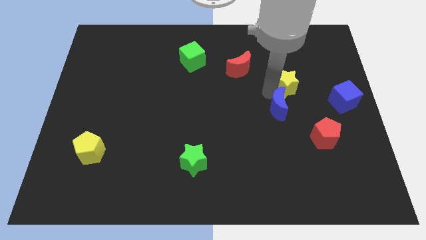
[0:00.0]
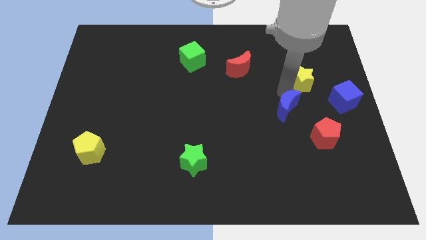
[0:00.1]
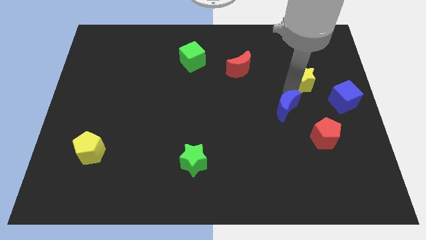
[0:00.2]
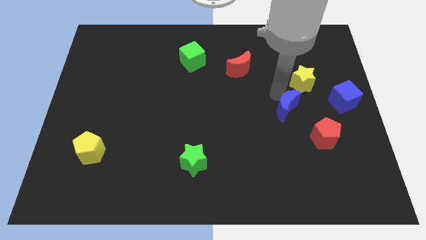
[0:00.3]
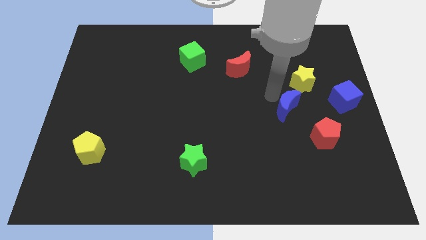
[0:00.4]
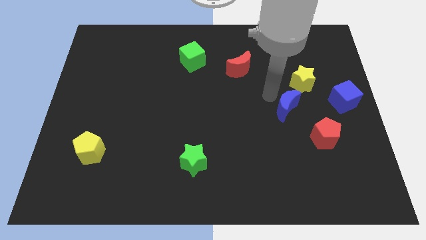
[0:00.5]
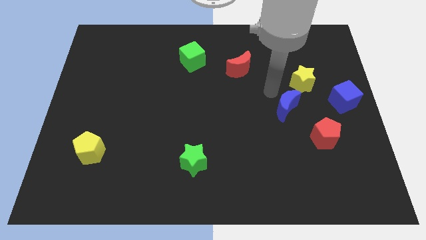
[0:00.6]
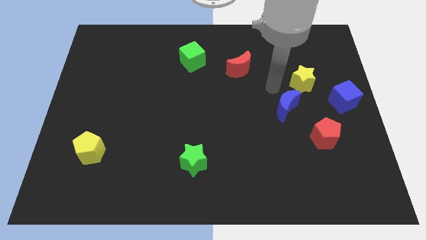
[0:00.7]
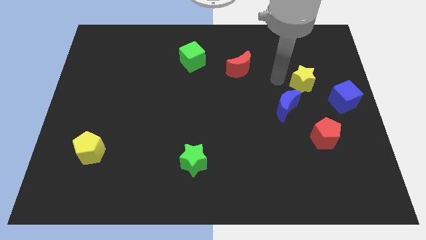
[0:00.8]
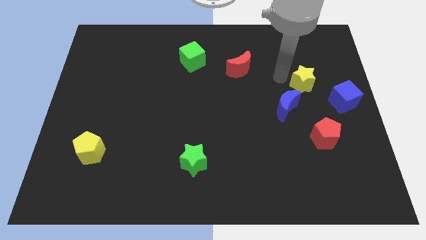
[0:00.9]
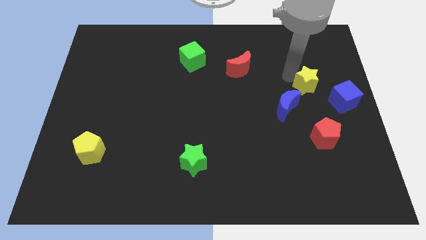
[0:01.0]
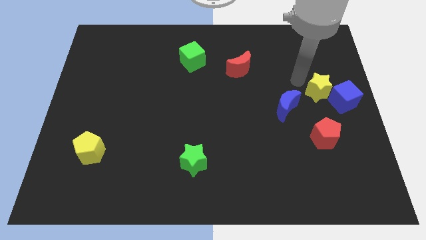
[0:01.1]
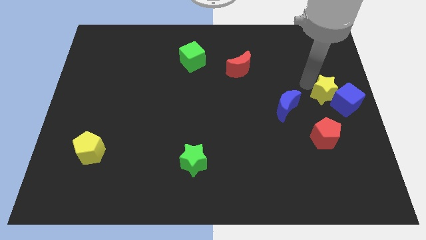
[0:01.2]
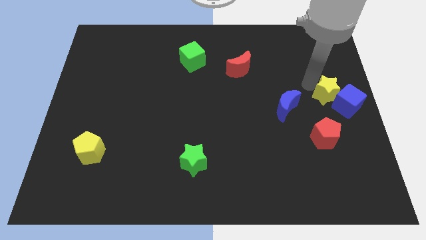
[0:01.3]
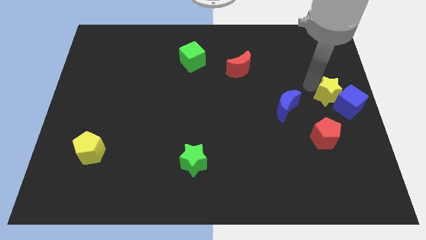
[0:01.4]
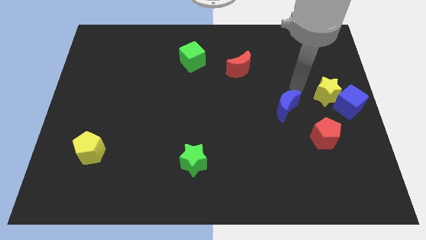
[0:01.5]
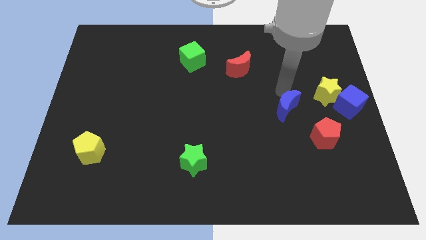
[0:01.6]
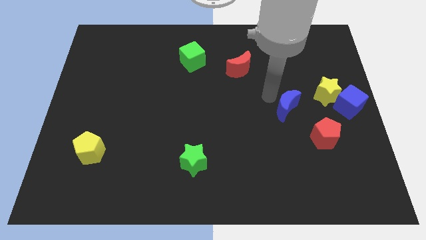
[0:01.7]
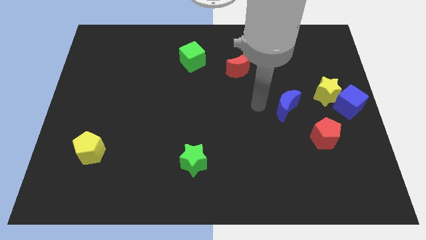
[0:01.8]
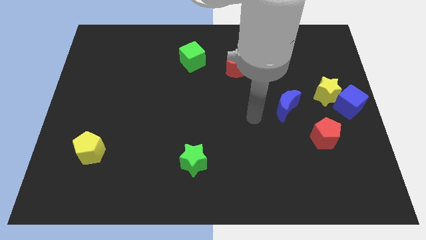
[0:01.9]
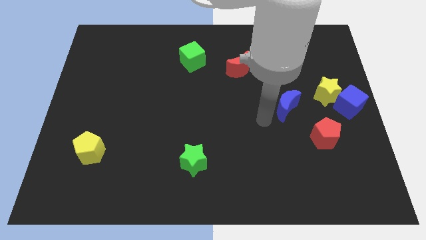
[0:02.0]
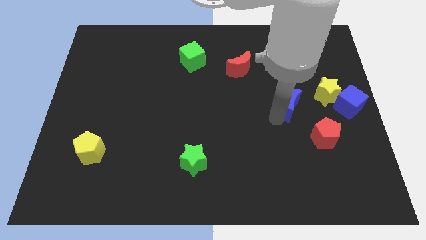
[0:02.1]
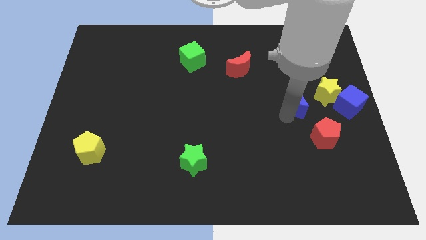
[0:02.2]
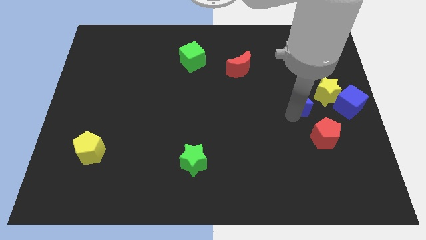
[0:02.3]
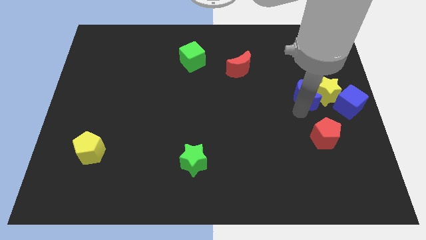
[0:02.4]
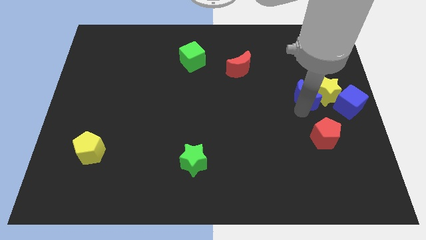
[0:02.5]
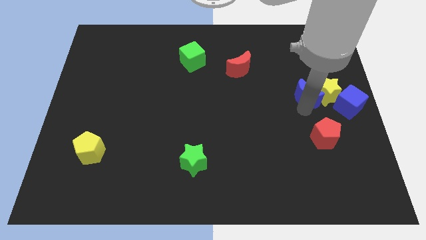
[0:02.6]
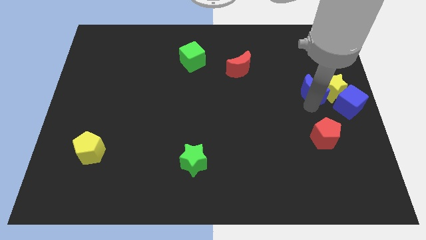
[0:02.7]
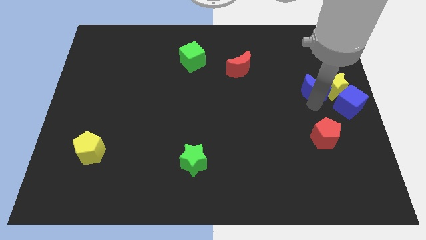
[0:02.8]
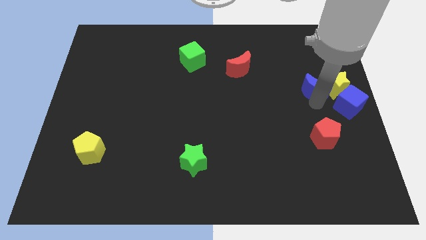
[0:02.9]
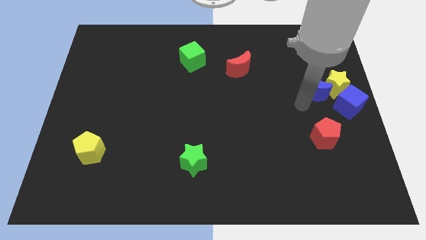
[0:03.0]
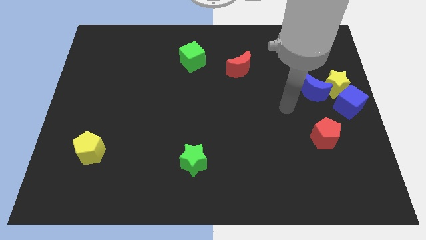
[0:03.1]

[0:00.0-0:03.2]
move the blue crescent into the yellow star

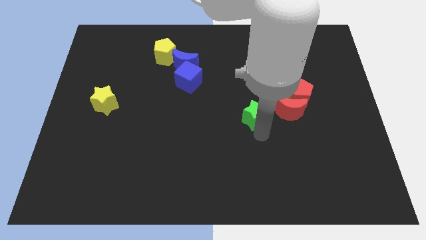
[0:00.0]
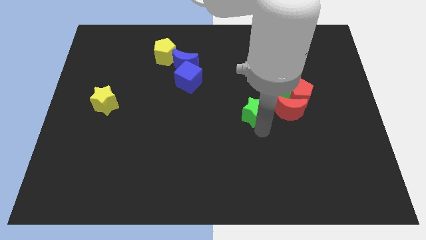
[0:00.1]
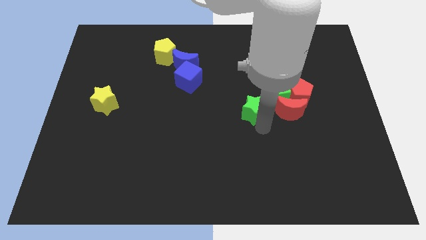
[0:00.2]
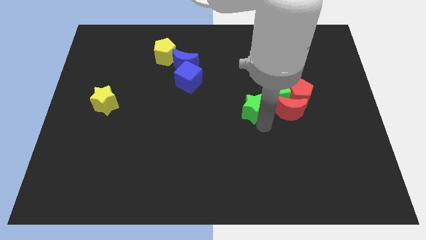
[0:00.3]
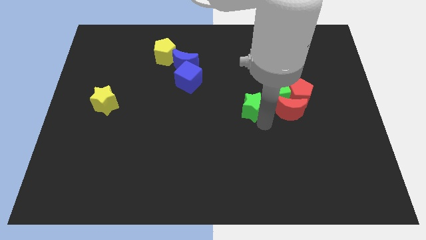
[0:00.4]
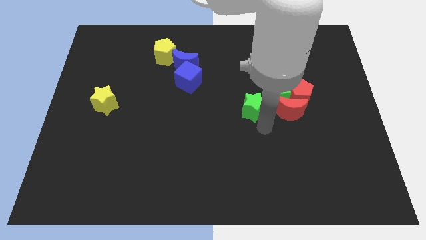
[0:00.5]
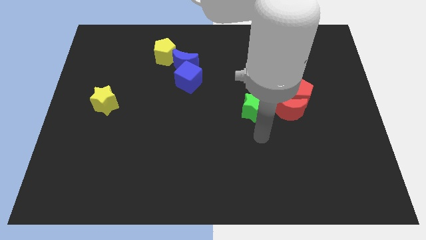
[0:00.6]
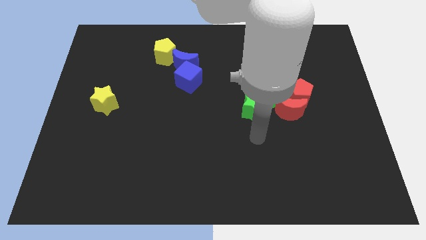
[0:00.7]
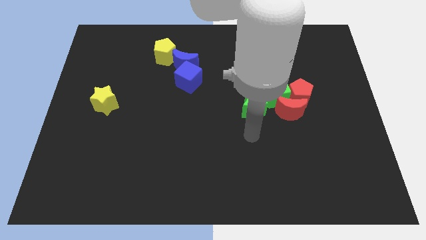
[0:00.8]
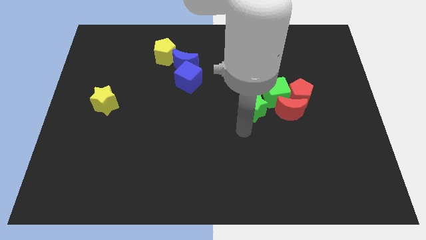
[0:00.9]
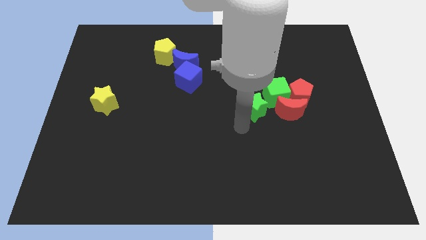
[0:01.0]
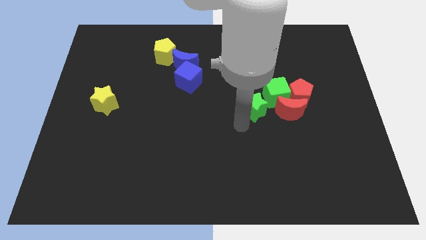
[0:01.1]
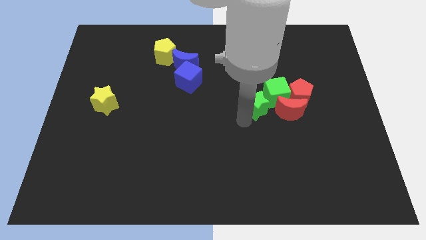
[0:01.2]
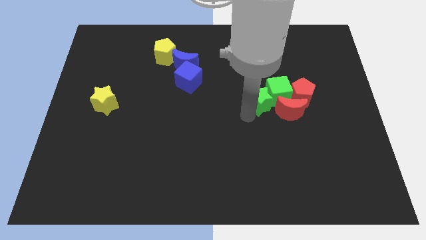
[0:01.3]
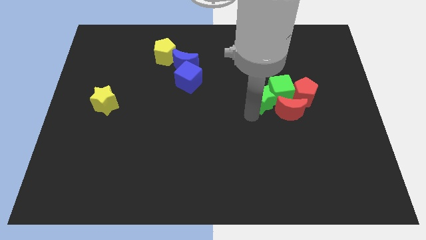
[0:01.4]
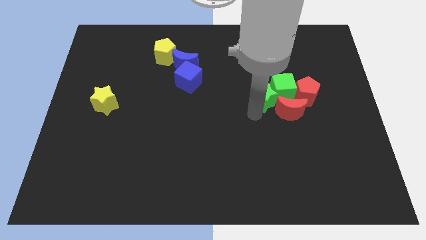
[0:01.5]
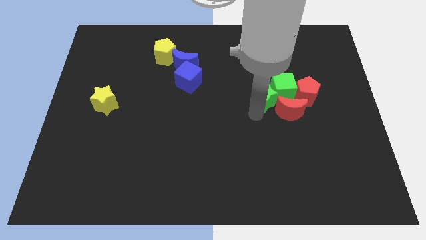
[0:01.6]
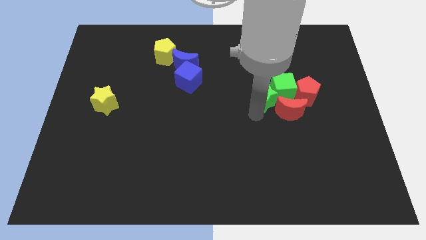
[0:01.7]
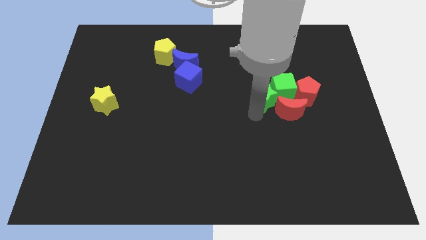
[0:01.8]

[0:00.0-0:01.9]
push the green star into the green cube

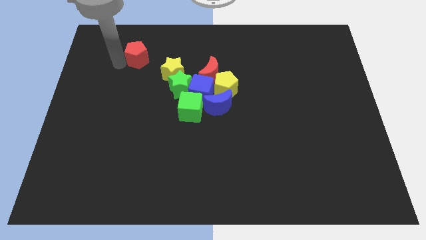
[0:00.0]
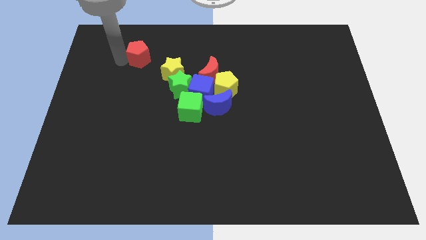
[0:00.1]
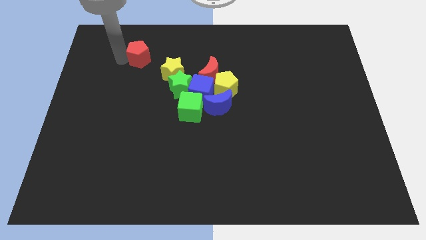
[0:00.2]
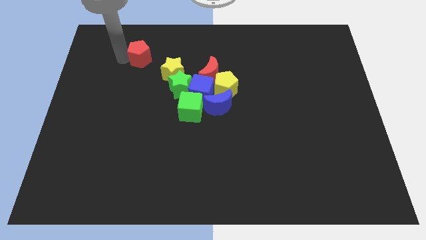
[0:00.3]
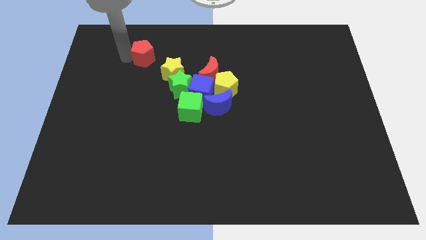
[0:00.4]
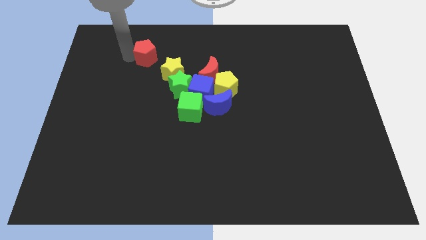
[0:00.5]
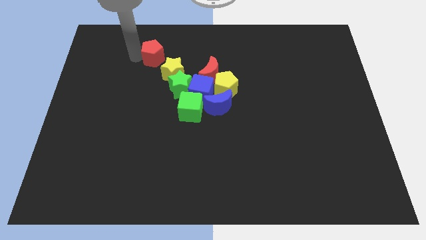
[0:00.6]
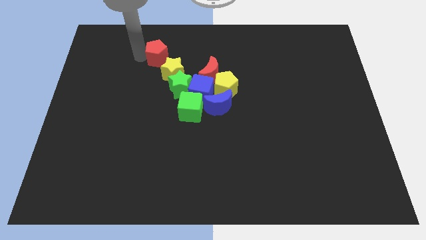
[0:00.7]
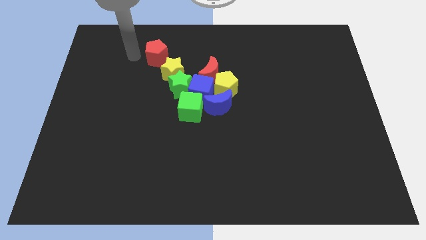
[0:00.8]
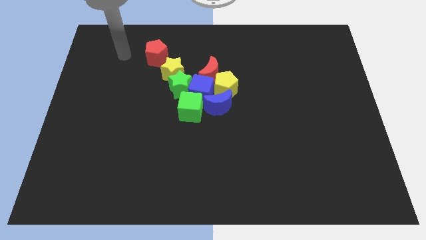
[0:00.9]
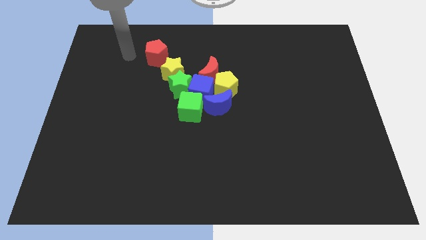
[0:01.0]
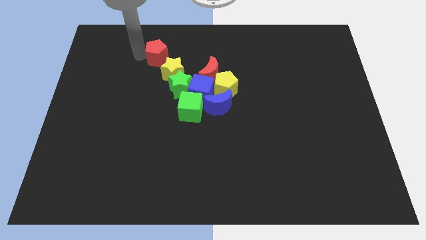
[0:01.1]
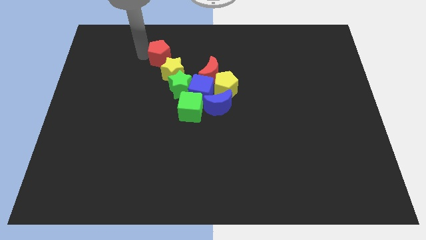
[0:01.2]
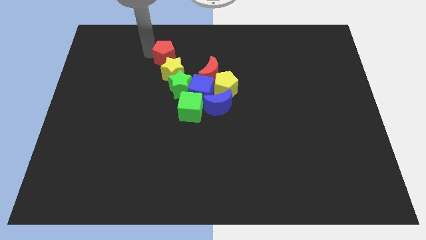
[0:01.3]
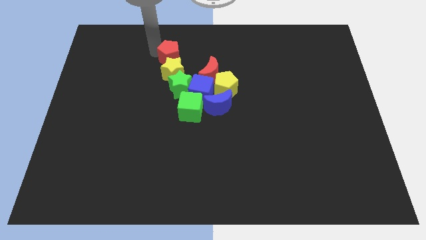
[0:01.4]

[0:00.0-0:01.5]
place the red pentagon on the top of the yellow star

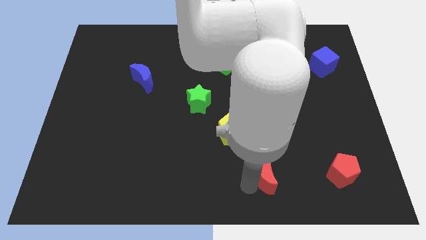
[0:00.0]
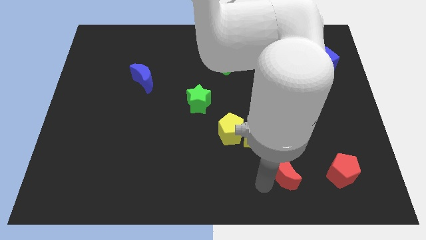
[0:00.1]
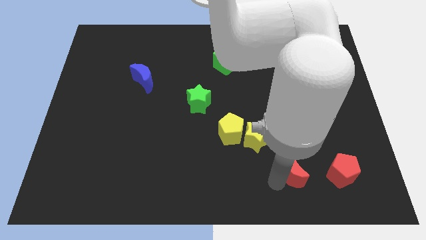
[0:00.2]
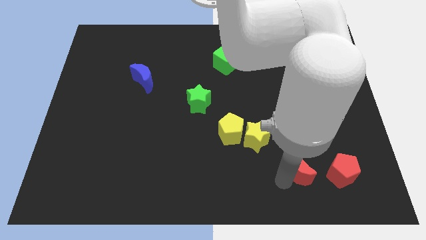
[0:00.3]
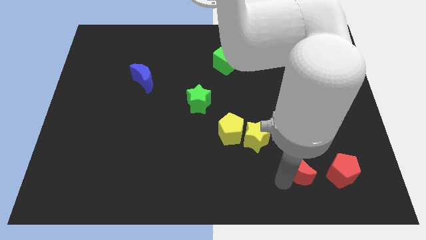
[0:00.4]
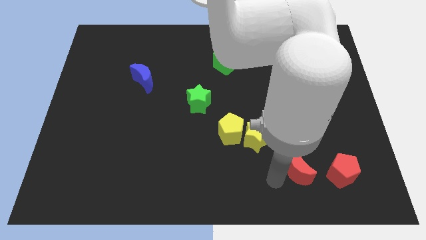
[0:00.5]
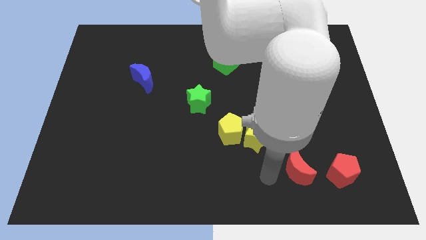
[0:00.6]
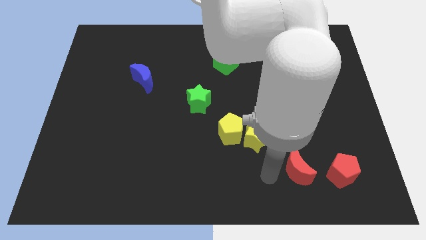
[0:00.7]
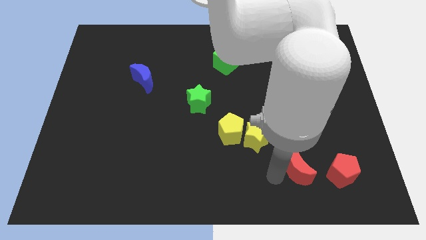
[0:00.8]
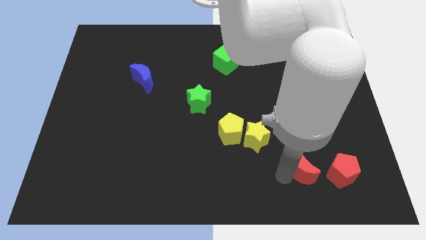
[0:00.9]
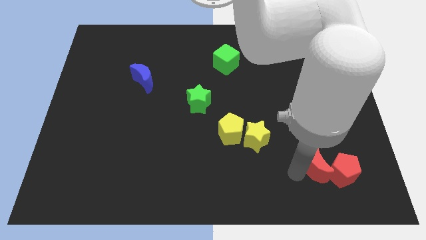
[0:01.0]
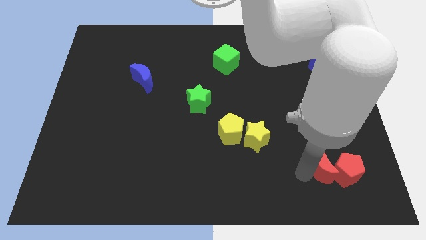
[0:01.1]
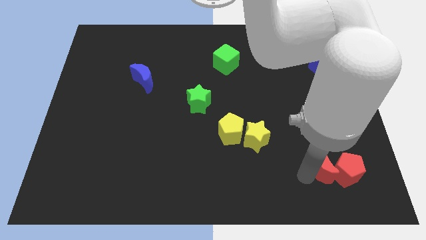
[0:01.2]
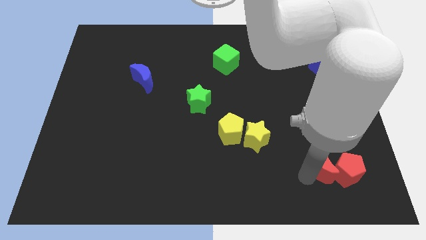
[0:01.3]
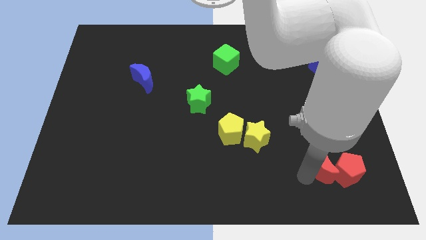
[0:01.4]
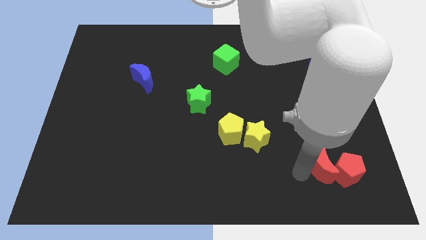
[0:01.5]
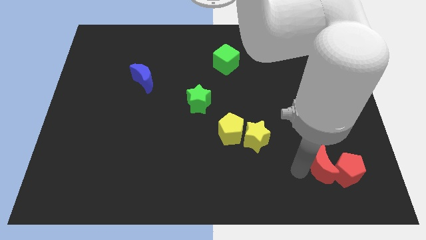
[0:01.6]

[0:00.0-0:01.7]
push the red crescent into the red pentagon

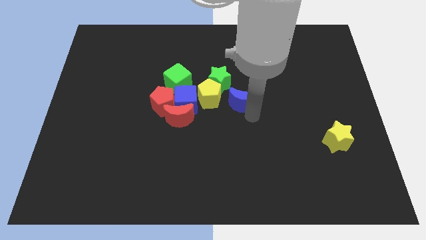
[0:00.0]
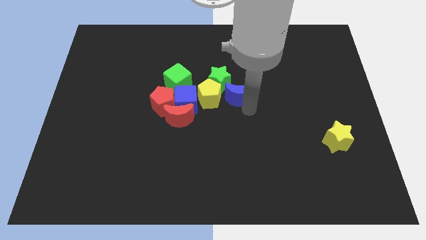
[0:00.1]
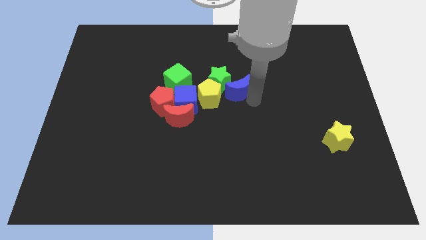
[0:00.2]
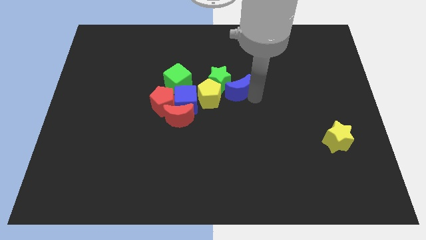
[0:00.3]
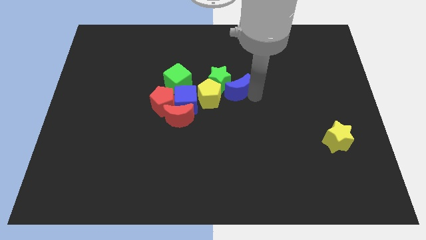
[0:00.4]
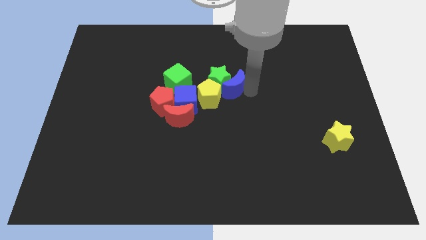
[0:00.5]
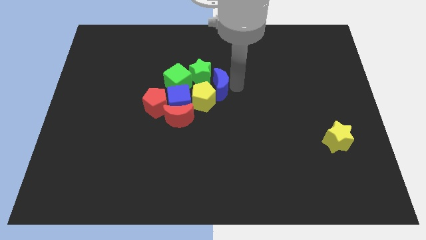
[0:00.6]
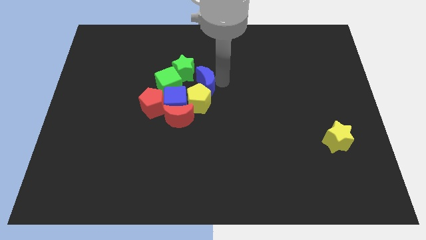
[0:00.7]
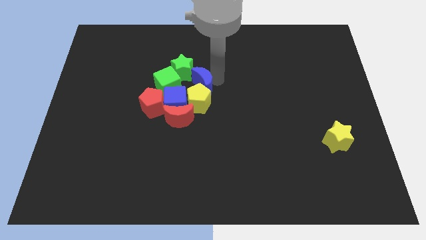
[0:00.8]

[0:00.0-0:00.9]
push blue moon into green star
